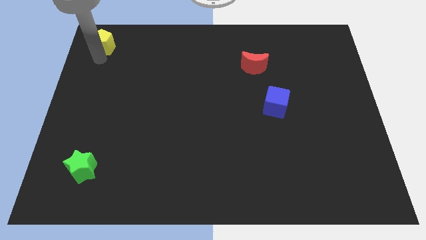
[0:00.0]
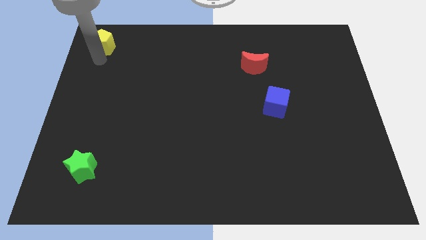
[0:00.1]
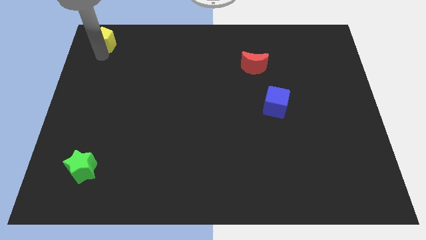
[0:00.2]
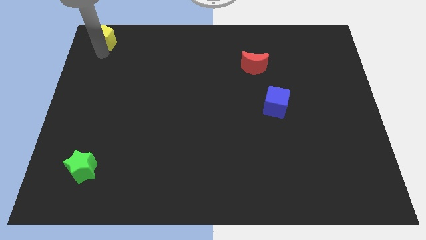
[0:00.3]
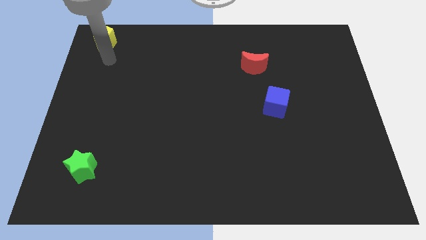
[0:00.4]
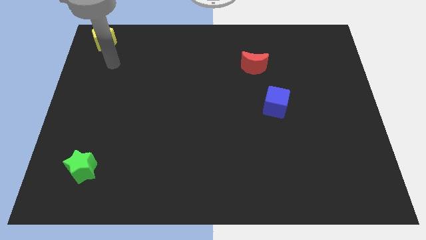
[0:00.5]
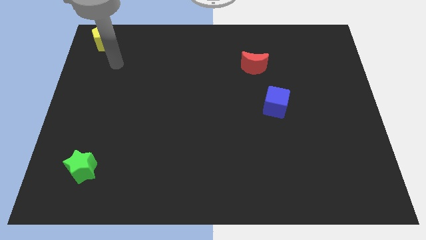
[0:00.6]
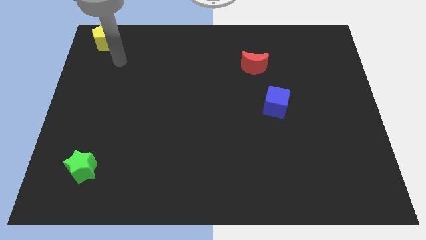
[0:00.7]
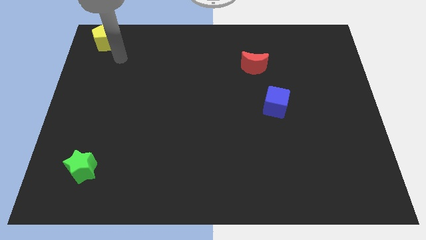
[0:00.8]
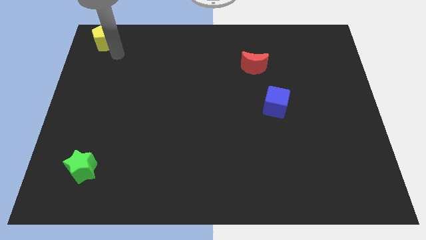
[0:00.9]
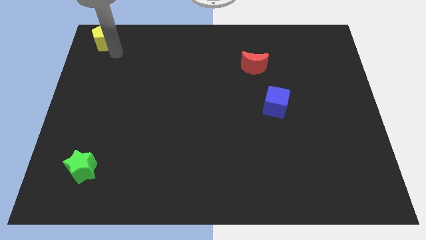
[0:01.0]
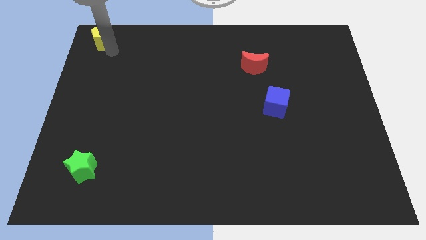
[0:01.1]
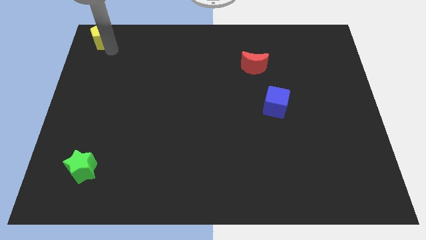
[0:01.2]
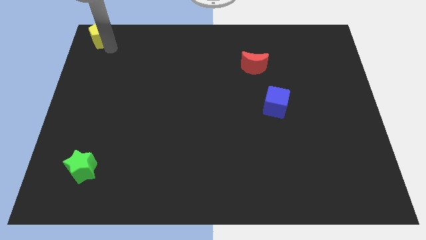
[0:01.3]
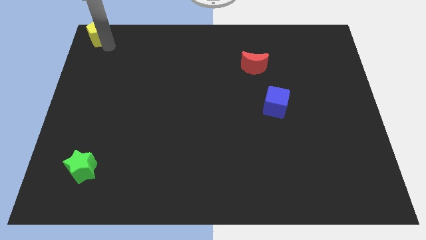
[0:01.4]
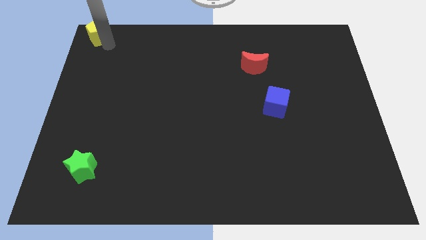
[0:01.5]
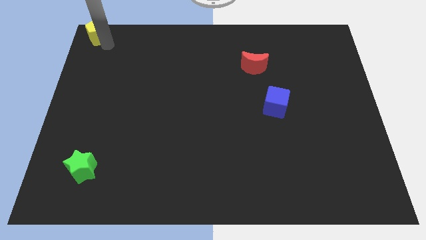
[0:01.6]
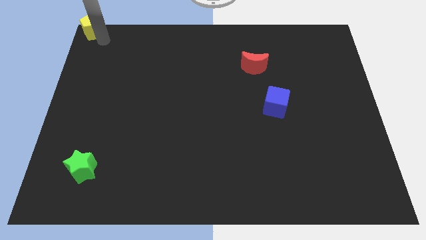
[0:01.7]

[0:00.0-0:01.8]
move the yellow pentagon towards the top left corner of the table

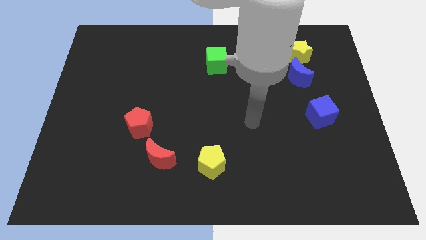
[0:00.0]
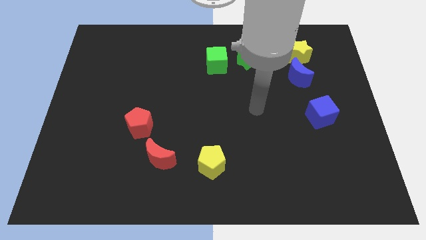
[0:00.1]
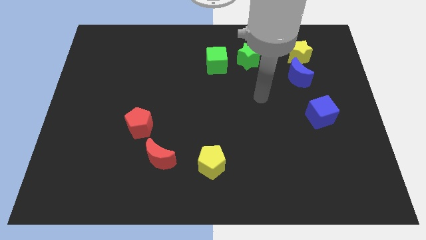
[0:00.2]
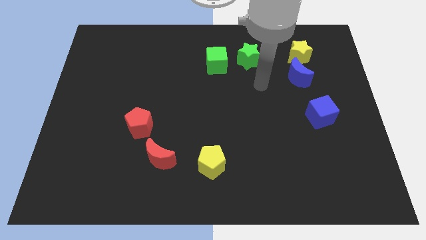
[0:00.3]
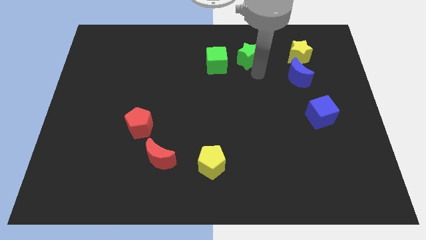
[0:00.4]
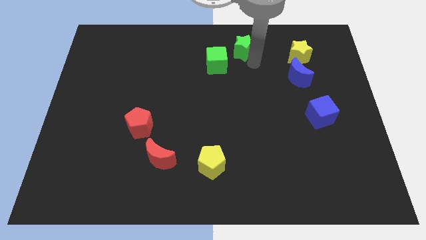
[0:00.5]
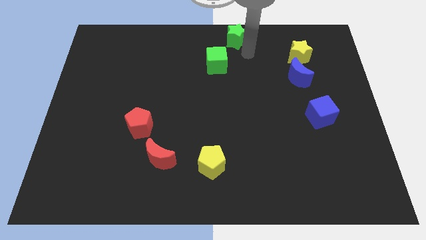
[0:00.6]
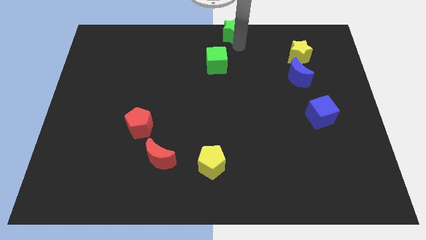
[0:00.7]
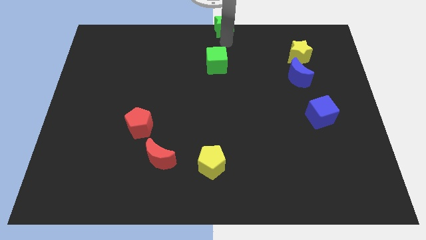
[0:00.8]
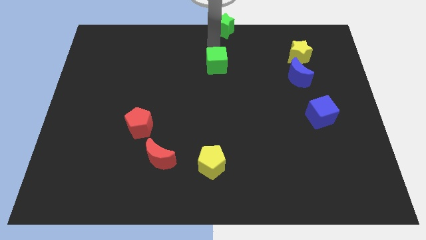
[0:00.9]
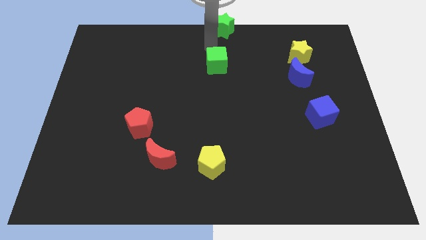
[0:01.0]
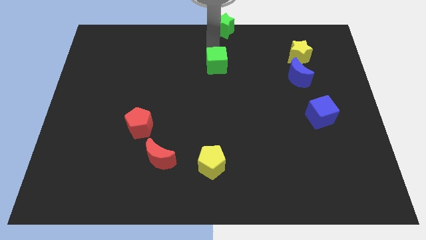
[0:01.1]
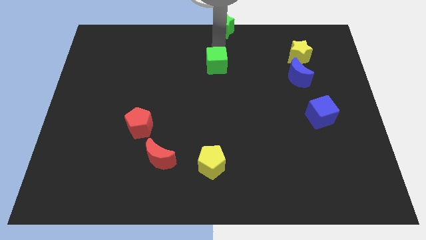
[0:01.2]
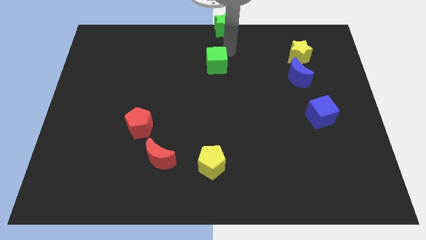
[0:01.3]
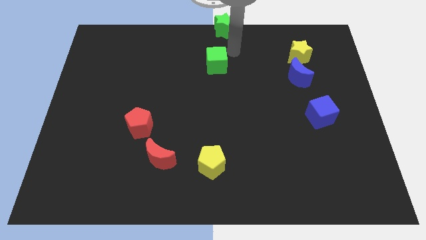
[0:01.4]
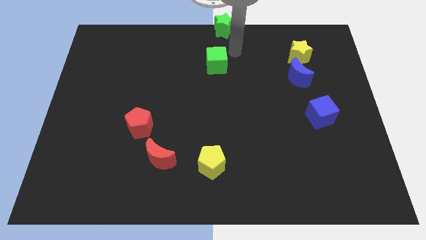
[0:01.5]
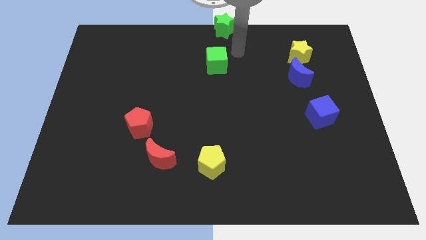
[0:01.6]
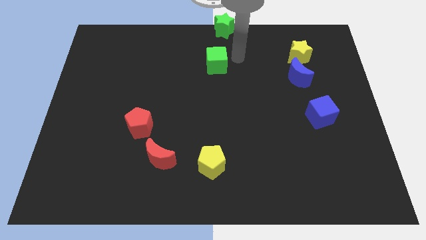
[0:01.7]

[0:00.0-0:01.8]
move green star to the top center

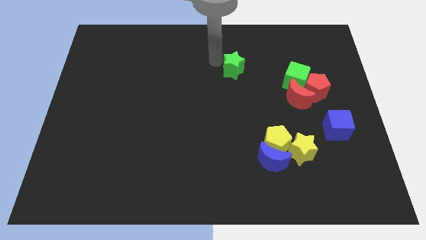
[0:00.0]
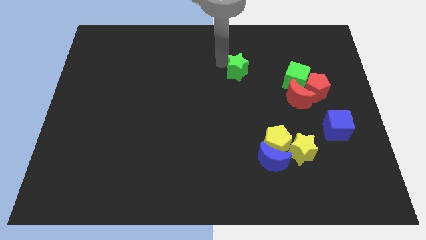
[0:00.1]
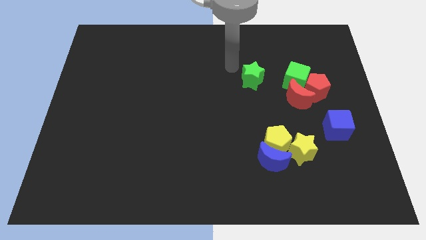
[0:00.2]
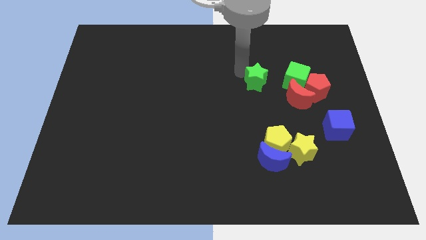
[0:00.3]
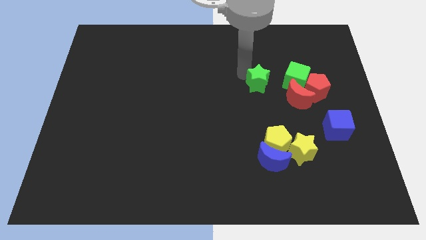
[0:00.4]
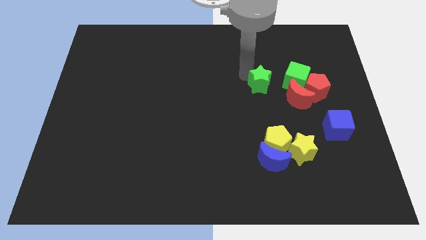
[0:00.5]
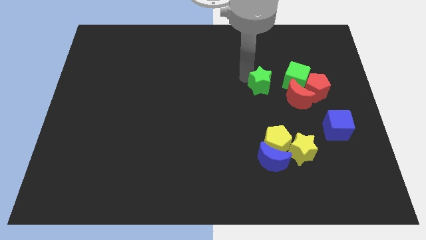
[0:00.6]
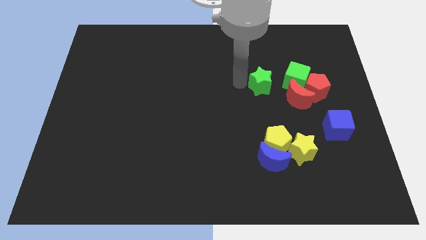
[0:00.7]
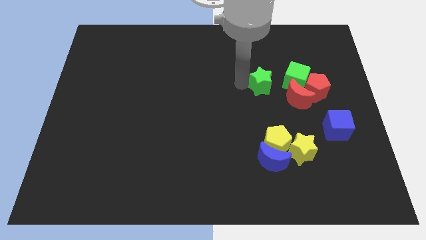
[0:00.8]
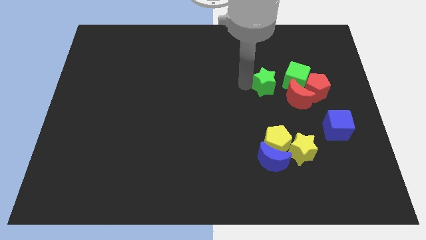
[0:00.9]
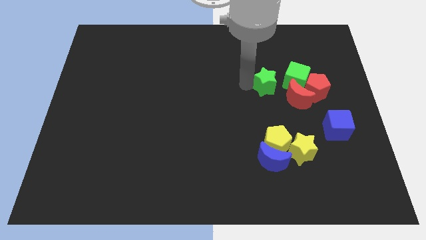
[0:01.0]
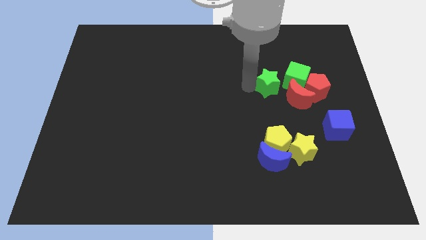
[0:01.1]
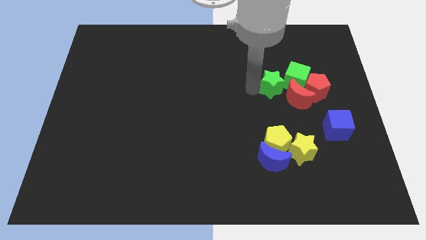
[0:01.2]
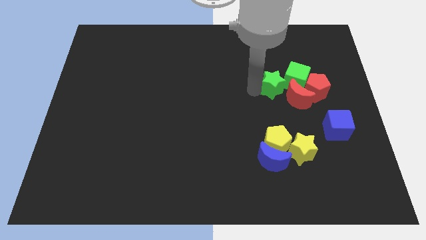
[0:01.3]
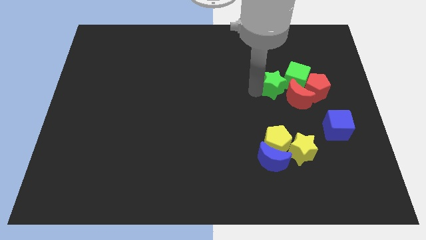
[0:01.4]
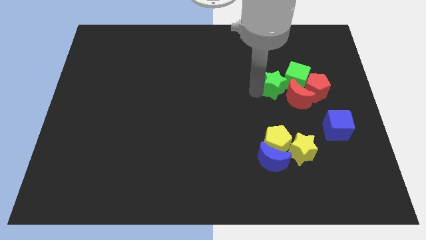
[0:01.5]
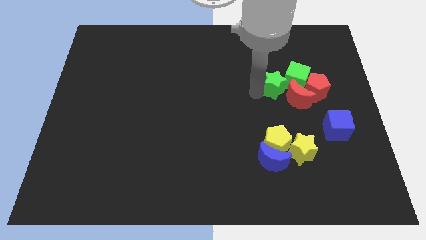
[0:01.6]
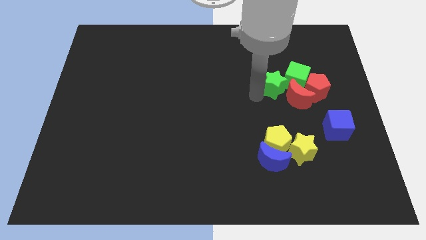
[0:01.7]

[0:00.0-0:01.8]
move the green star to the bottom left of the green cube

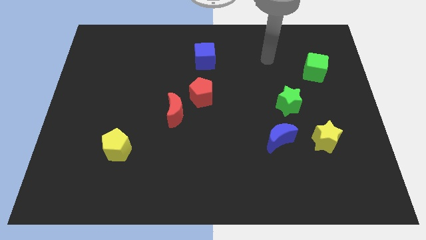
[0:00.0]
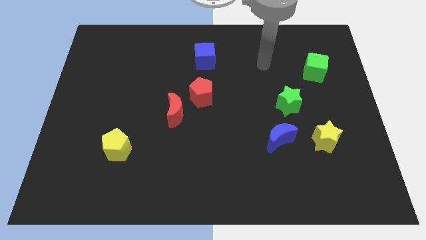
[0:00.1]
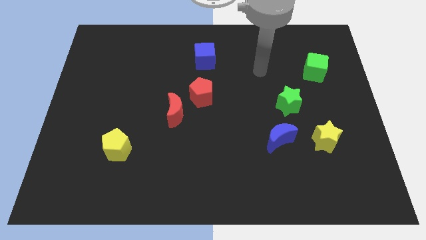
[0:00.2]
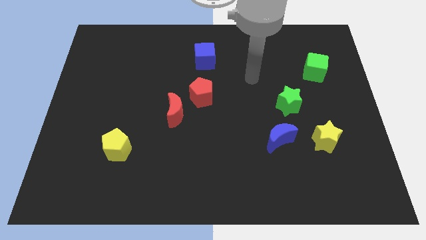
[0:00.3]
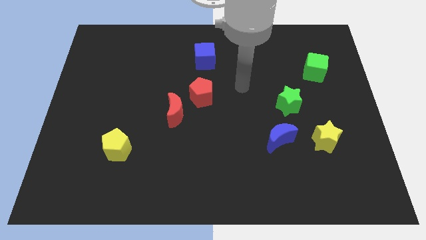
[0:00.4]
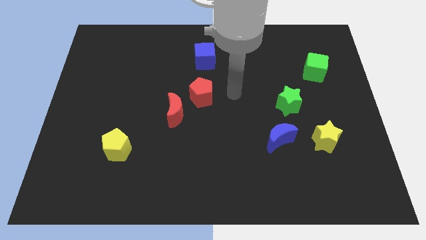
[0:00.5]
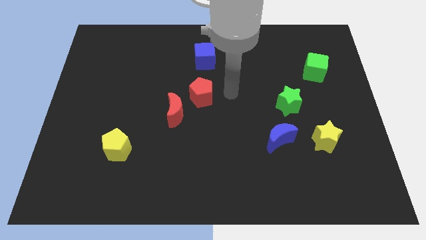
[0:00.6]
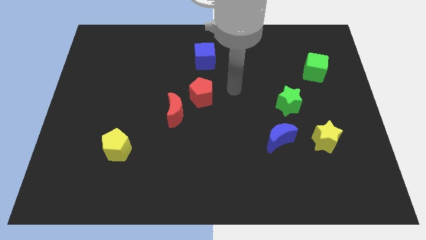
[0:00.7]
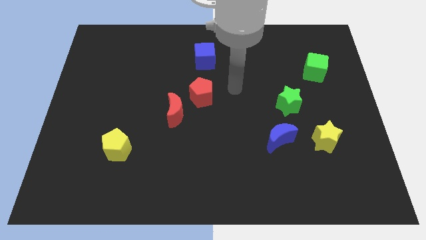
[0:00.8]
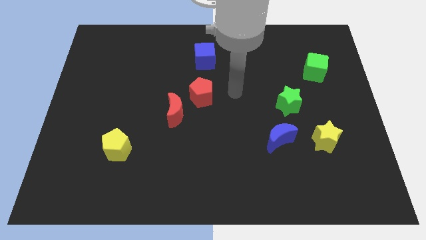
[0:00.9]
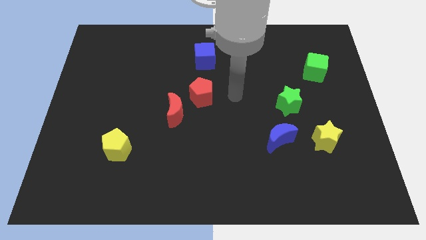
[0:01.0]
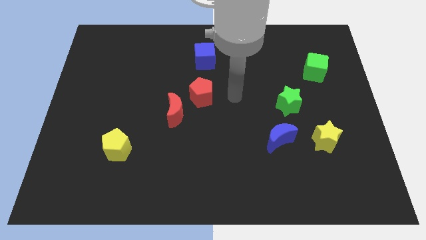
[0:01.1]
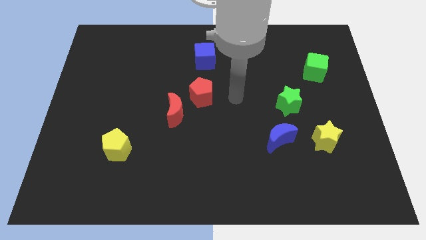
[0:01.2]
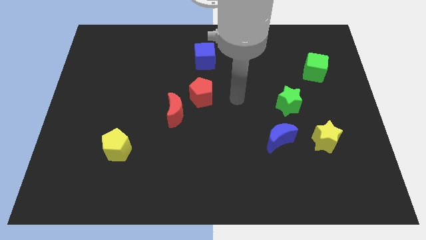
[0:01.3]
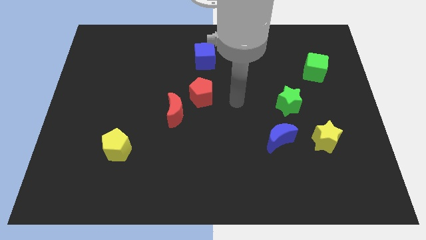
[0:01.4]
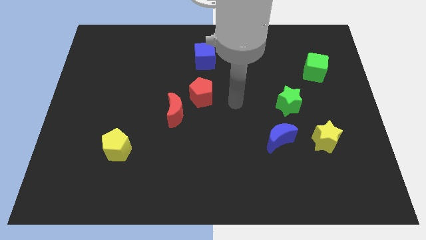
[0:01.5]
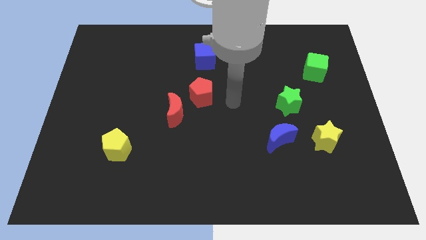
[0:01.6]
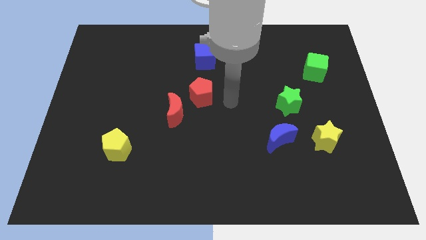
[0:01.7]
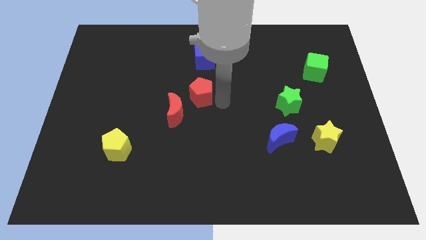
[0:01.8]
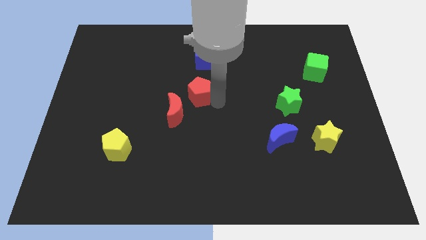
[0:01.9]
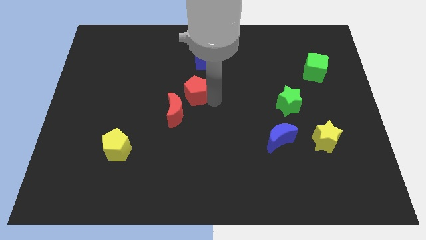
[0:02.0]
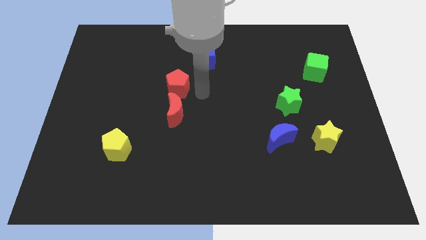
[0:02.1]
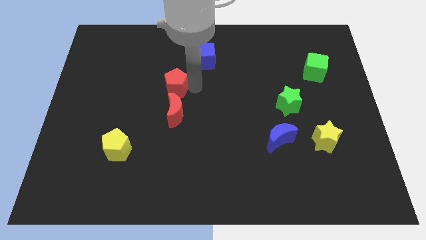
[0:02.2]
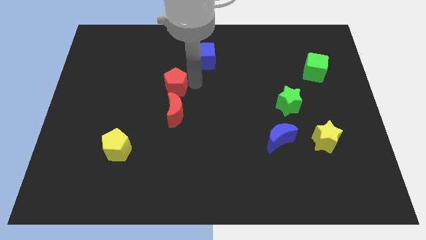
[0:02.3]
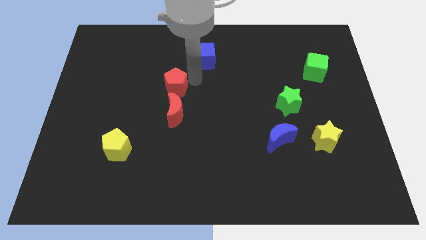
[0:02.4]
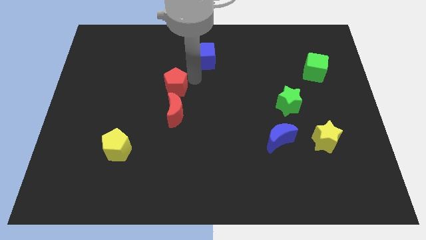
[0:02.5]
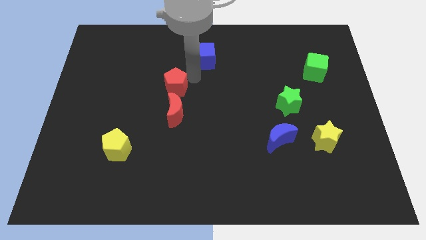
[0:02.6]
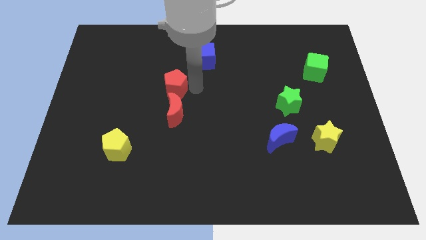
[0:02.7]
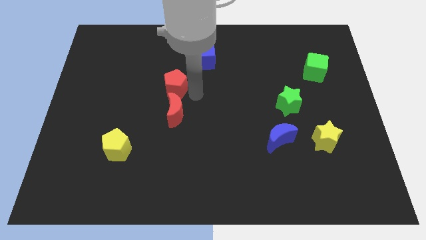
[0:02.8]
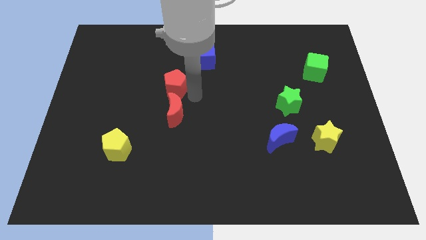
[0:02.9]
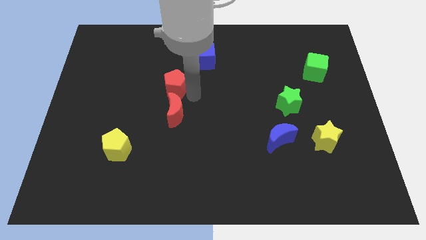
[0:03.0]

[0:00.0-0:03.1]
move the red pentagon to the top of the red moon

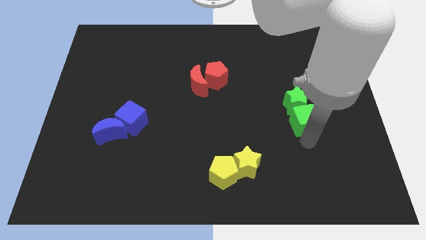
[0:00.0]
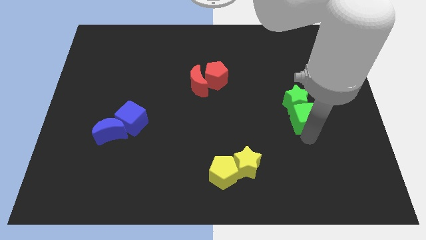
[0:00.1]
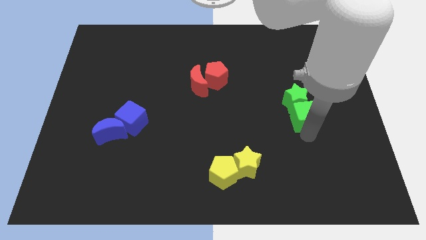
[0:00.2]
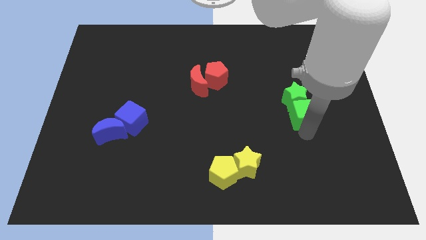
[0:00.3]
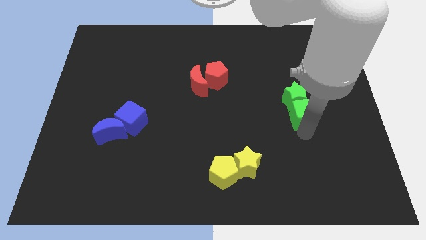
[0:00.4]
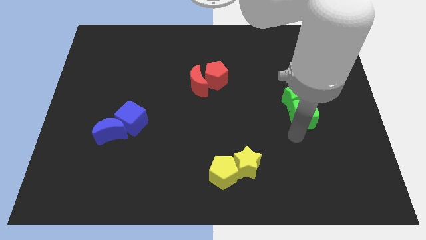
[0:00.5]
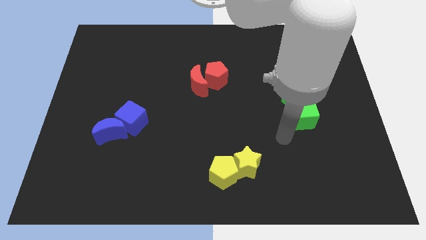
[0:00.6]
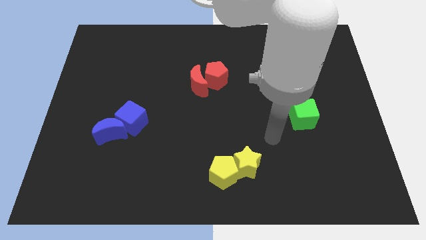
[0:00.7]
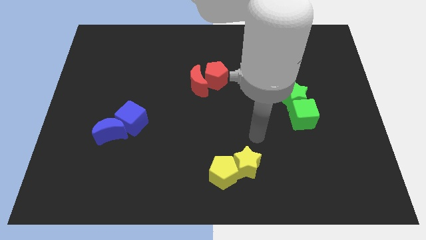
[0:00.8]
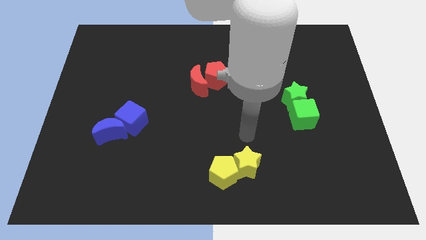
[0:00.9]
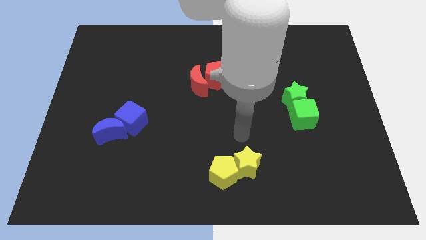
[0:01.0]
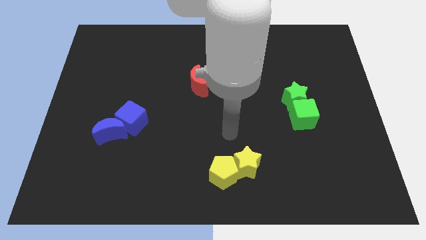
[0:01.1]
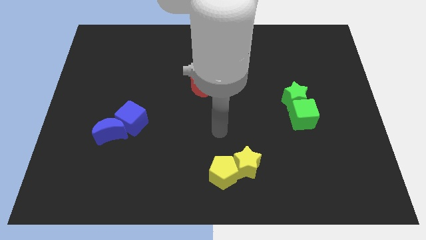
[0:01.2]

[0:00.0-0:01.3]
push the green cube with the green star upwards
